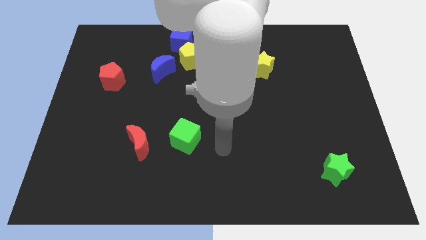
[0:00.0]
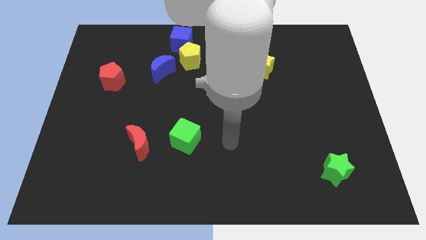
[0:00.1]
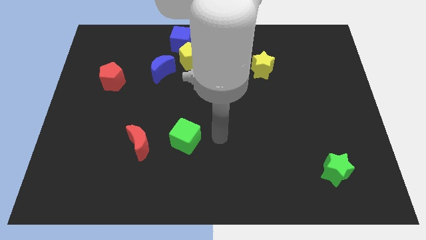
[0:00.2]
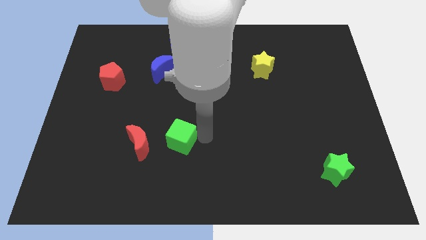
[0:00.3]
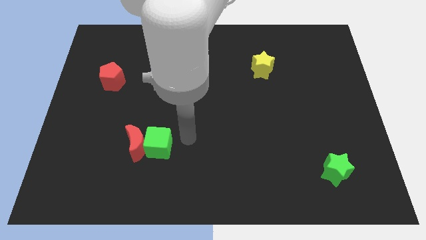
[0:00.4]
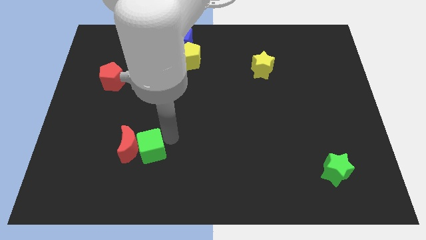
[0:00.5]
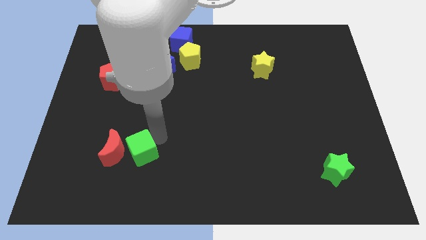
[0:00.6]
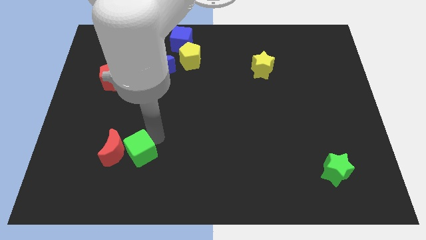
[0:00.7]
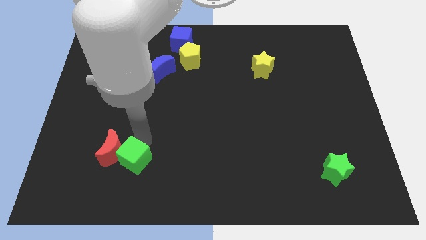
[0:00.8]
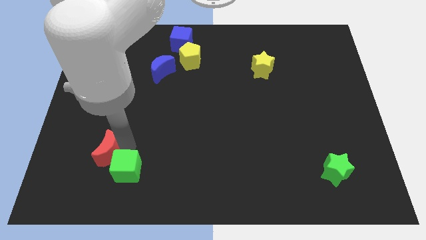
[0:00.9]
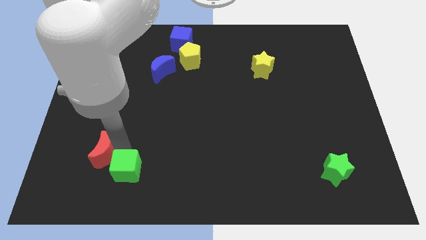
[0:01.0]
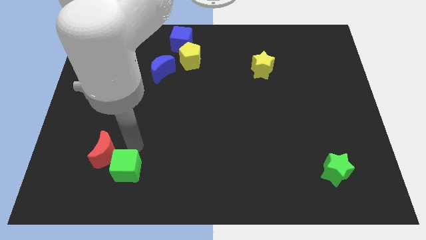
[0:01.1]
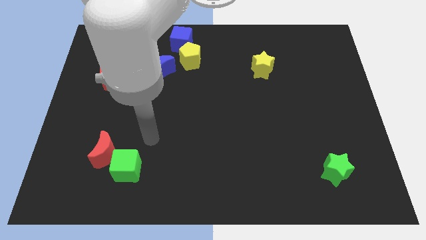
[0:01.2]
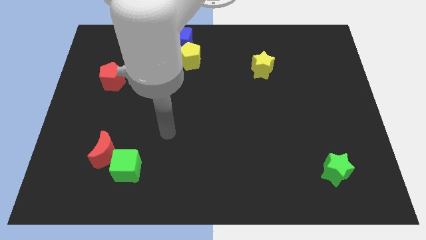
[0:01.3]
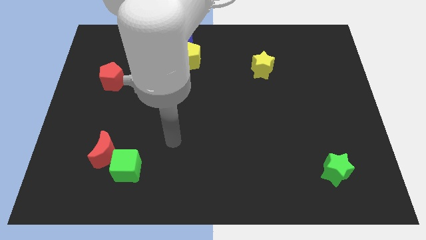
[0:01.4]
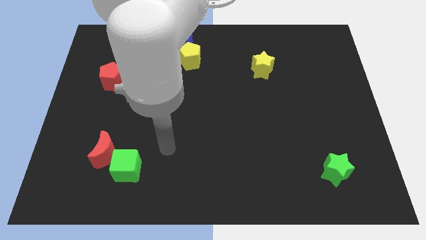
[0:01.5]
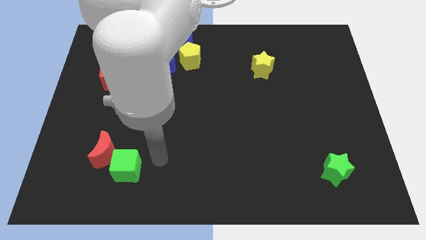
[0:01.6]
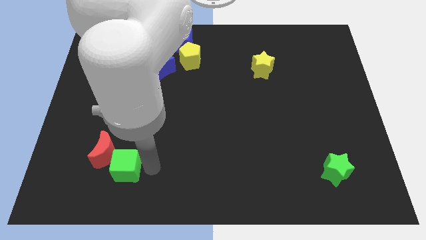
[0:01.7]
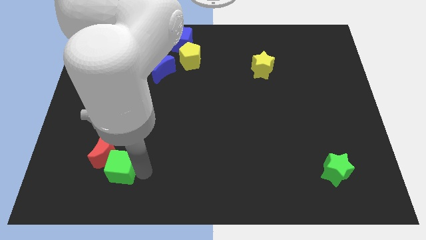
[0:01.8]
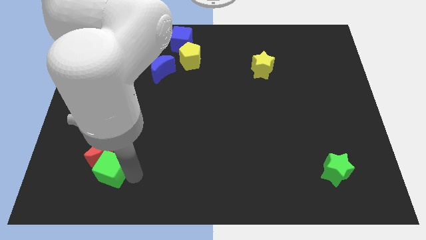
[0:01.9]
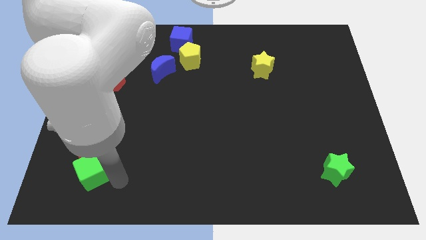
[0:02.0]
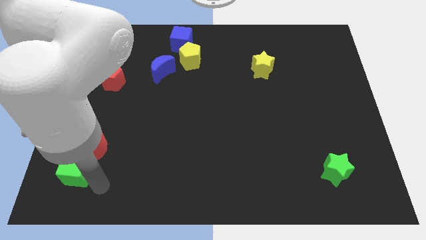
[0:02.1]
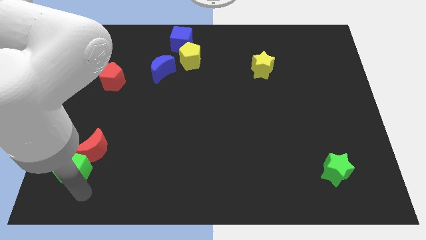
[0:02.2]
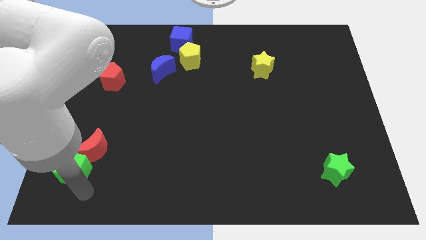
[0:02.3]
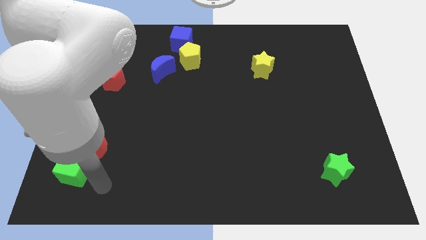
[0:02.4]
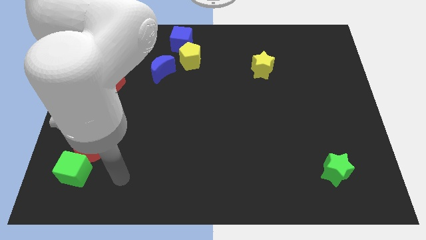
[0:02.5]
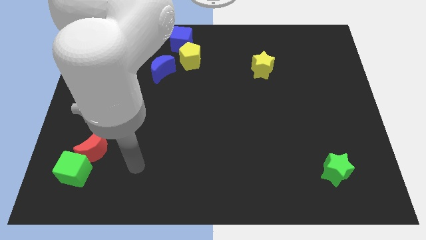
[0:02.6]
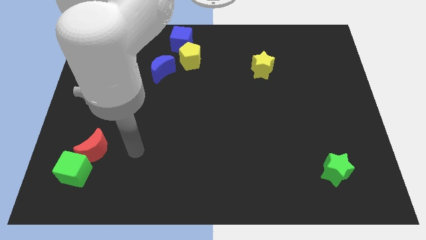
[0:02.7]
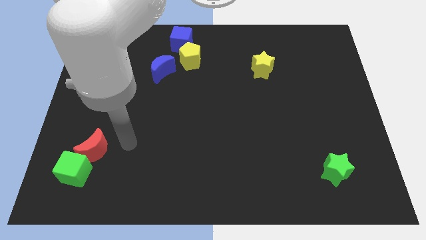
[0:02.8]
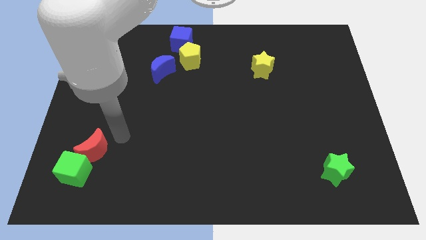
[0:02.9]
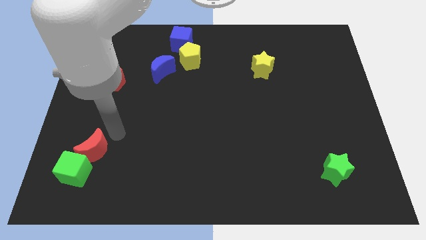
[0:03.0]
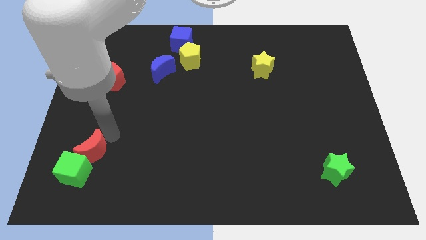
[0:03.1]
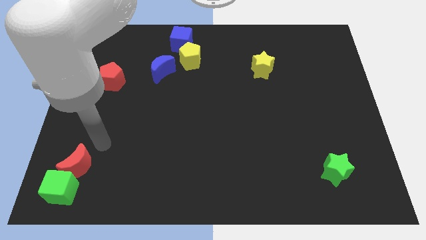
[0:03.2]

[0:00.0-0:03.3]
push red crescent and green cube towards the left side of the board

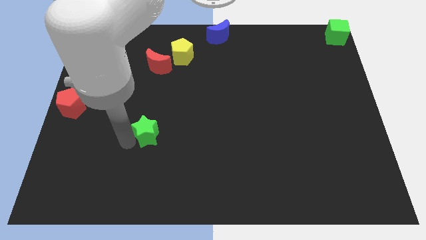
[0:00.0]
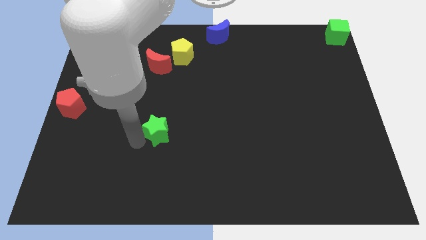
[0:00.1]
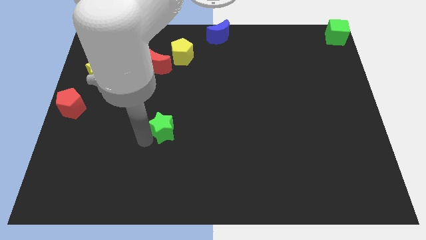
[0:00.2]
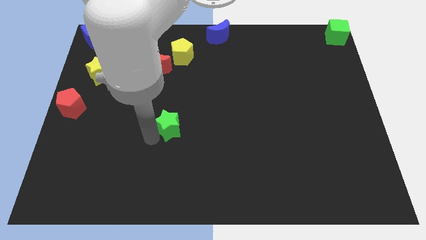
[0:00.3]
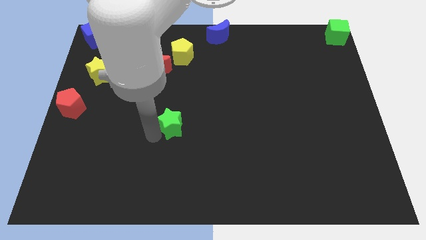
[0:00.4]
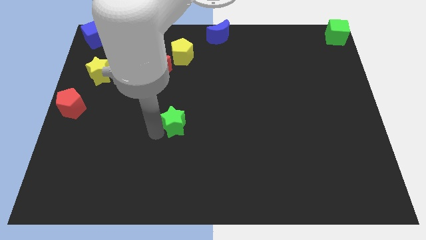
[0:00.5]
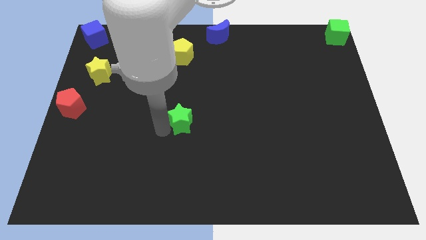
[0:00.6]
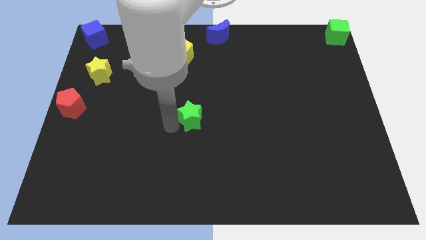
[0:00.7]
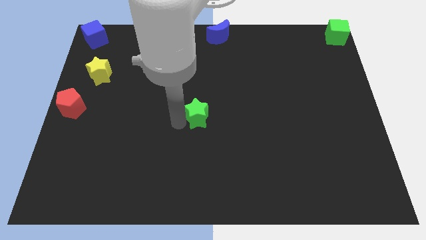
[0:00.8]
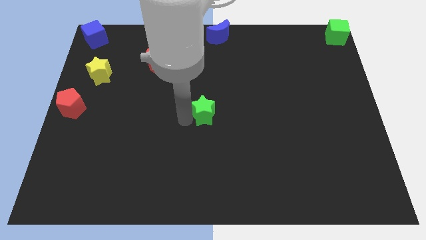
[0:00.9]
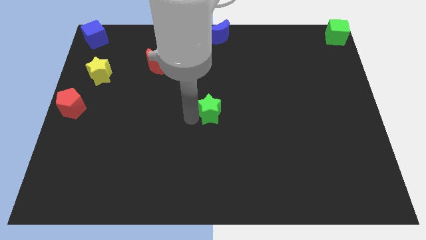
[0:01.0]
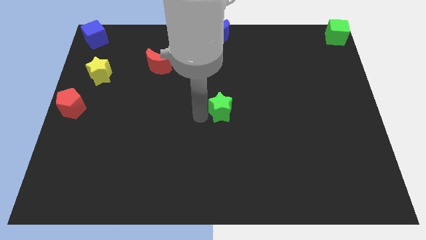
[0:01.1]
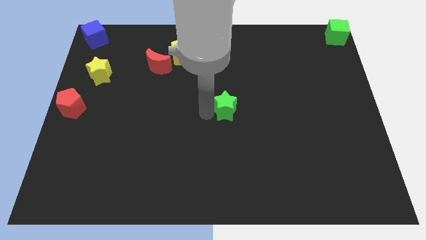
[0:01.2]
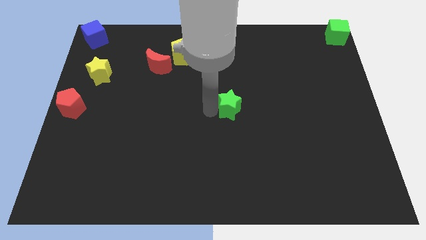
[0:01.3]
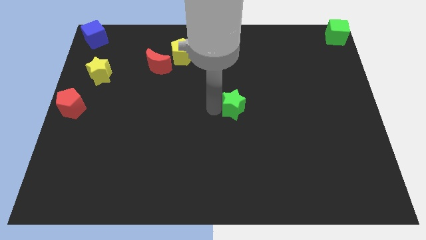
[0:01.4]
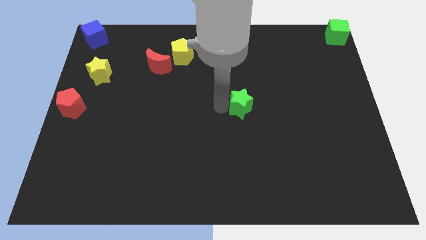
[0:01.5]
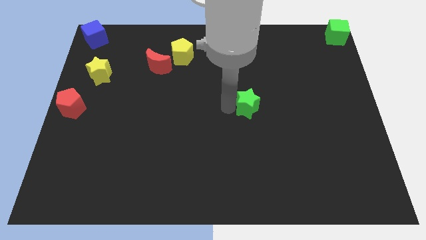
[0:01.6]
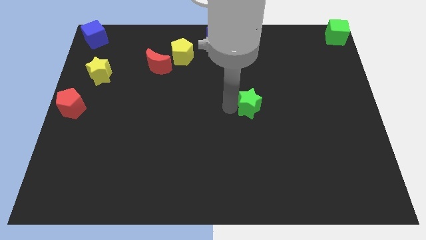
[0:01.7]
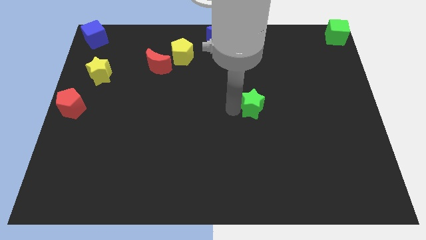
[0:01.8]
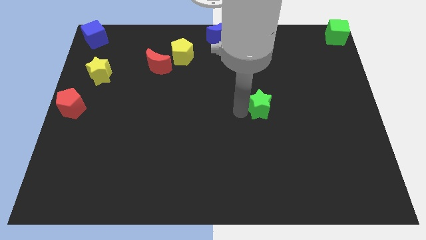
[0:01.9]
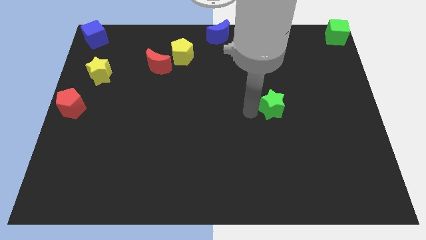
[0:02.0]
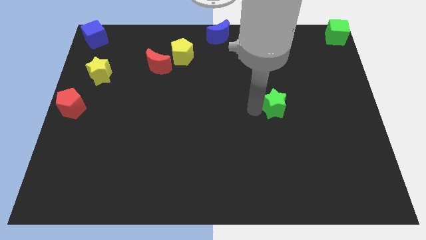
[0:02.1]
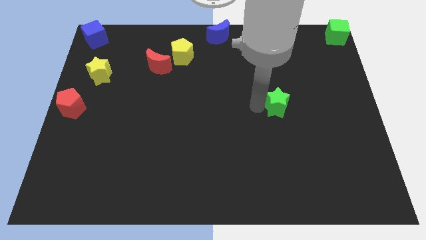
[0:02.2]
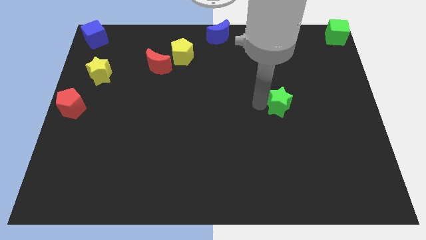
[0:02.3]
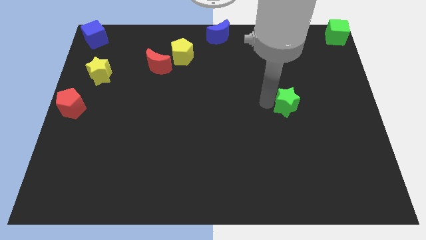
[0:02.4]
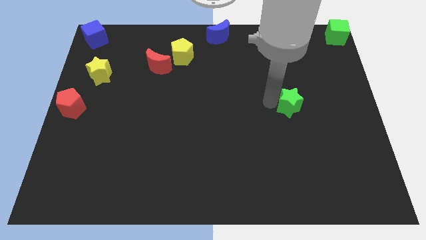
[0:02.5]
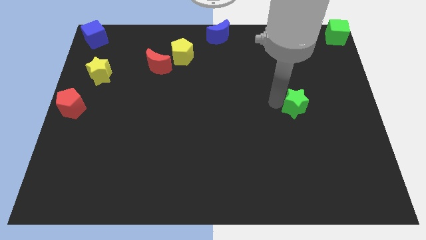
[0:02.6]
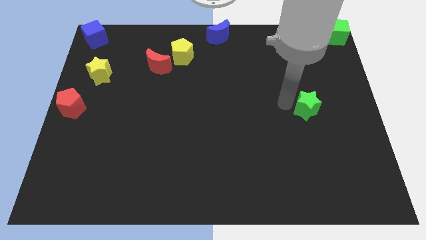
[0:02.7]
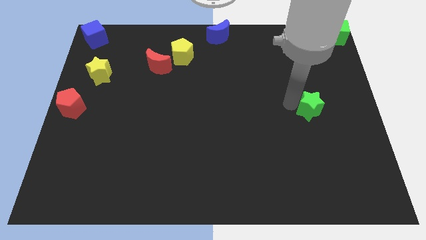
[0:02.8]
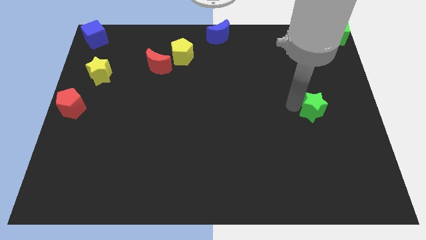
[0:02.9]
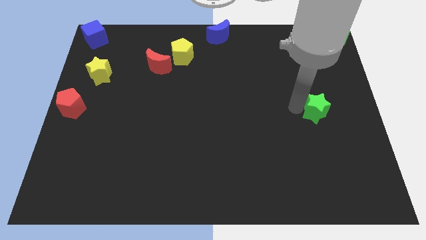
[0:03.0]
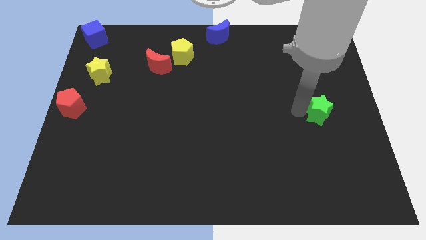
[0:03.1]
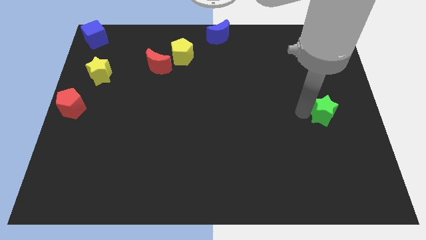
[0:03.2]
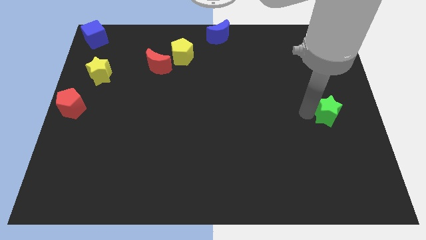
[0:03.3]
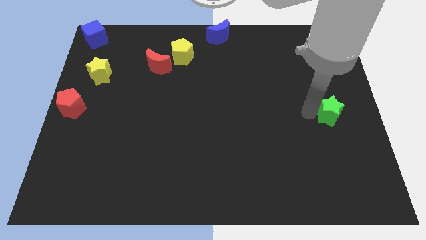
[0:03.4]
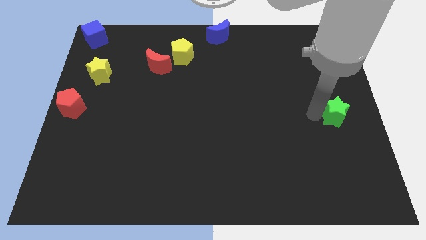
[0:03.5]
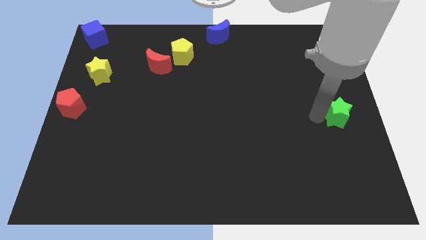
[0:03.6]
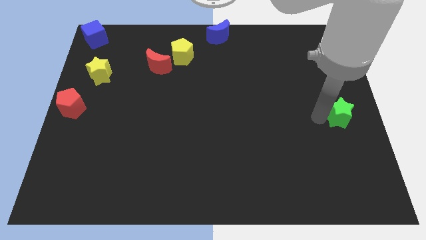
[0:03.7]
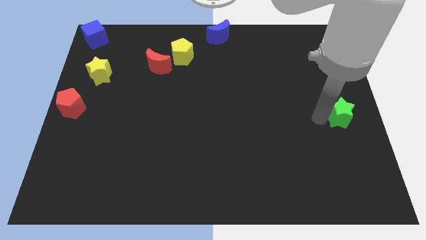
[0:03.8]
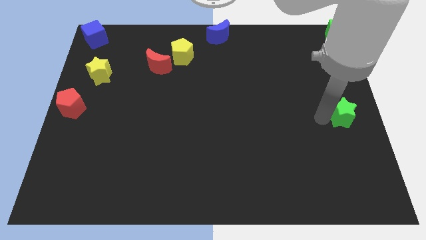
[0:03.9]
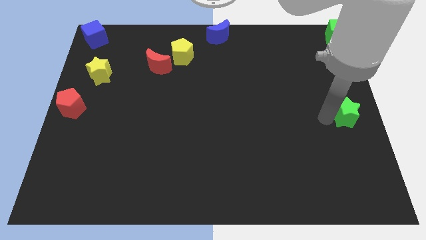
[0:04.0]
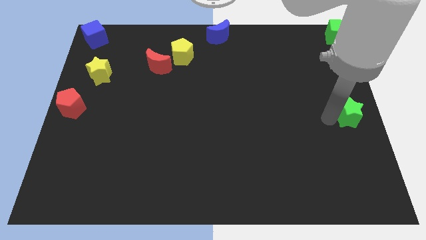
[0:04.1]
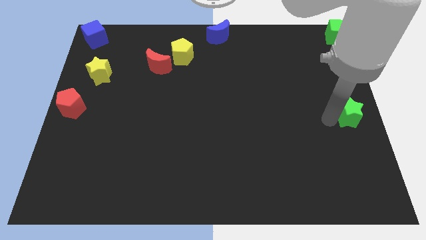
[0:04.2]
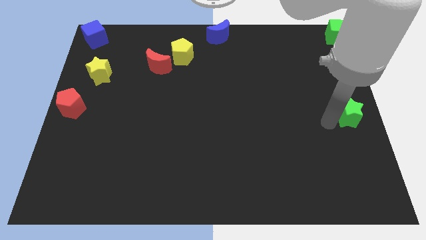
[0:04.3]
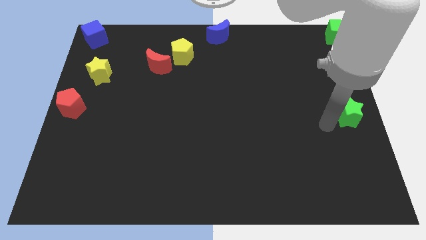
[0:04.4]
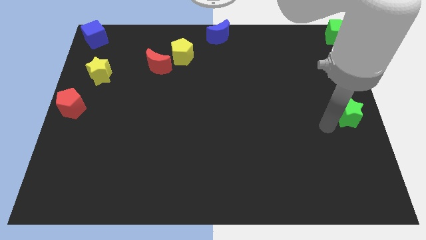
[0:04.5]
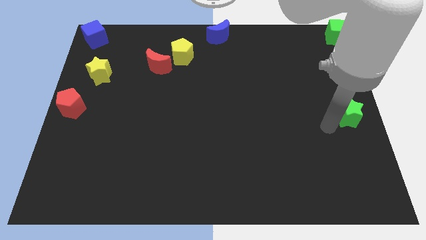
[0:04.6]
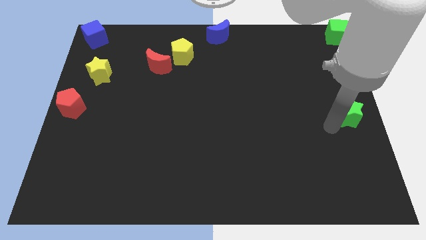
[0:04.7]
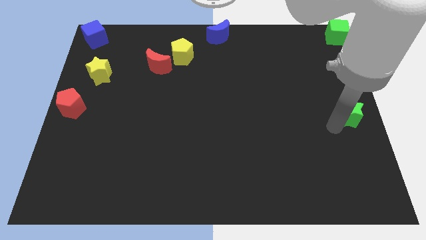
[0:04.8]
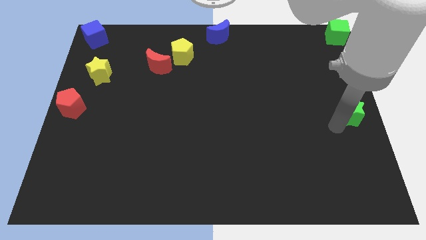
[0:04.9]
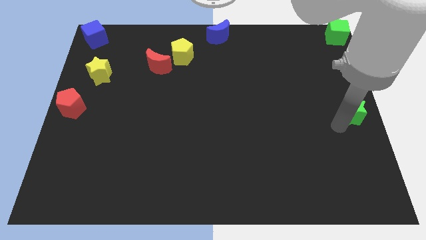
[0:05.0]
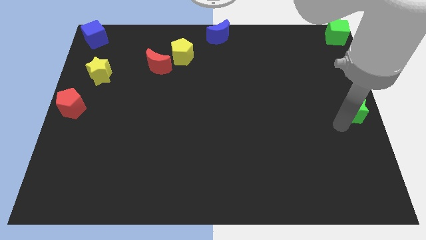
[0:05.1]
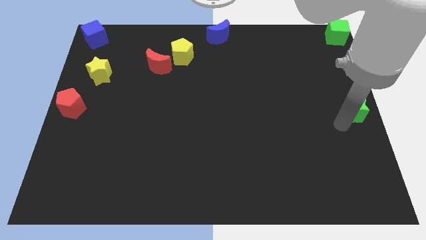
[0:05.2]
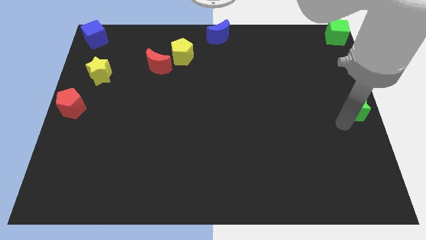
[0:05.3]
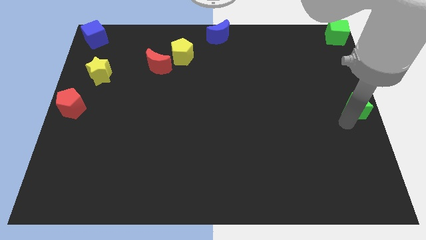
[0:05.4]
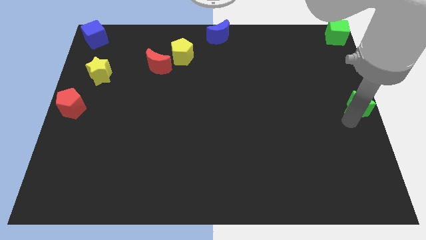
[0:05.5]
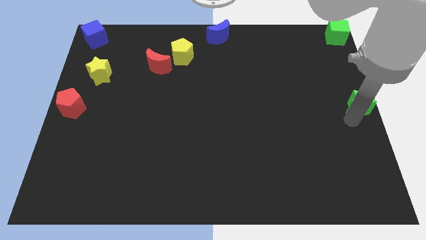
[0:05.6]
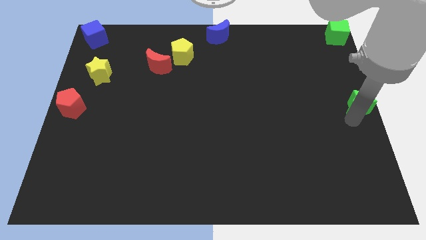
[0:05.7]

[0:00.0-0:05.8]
move the green star to the centre right of the board
